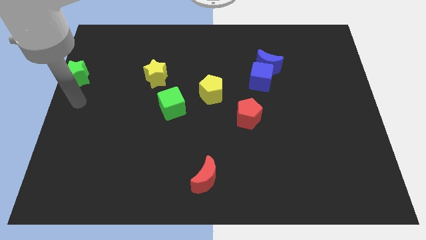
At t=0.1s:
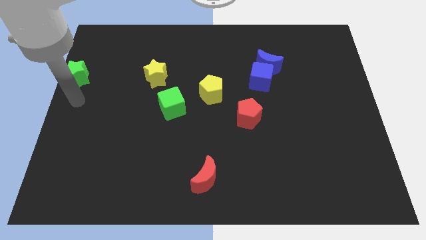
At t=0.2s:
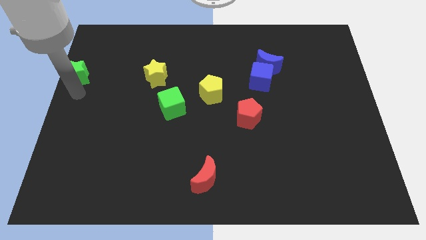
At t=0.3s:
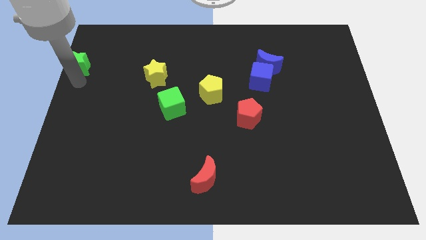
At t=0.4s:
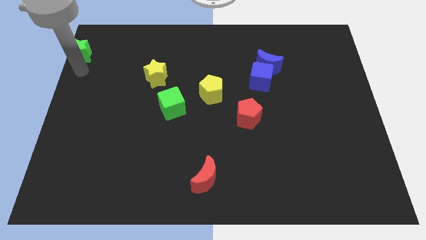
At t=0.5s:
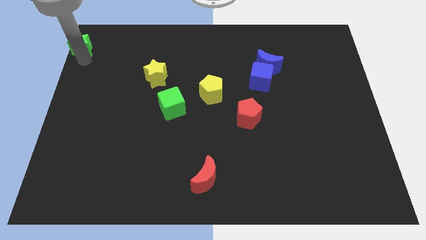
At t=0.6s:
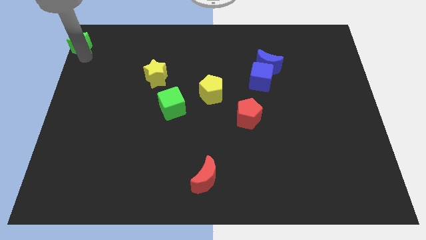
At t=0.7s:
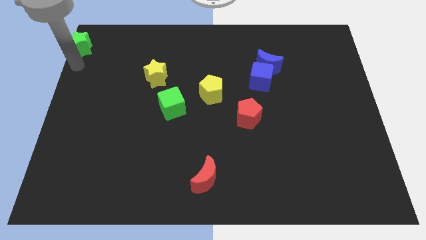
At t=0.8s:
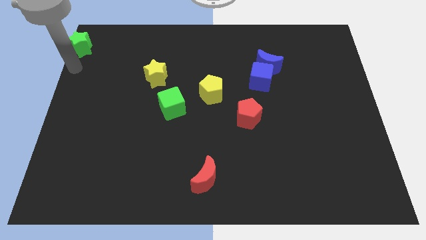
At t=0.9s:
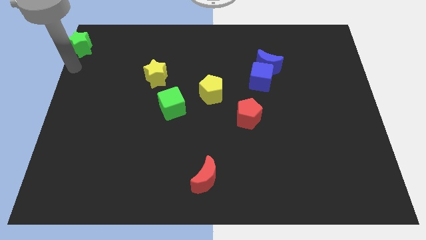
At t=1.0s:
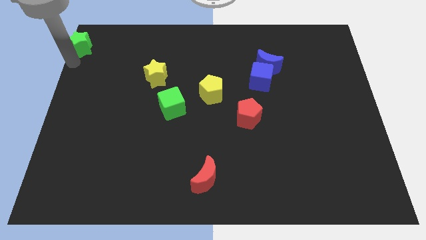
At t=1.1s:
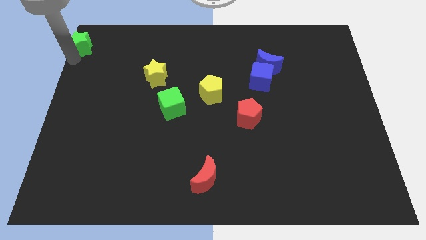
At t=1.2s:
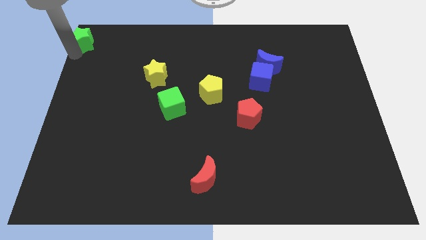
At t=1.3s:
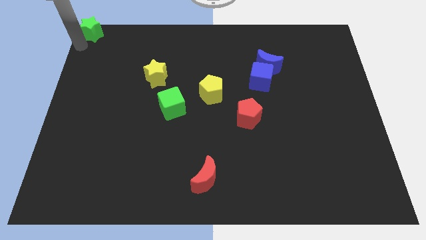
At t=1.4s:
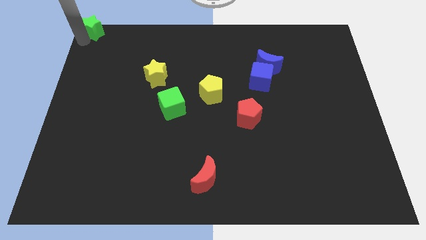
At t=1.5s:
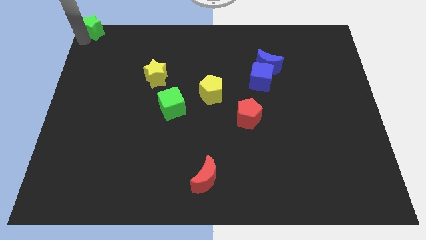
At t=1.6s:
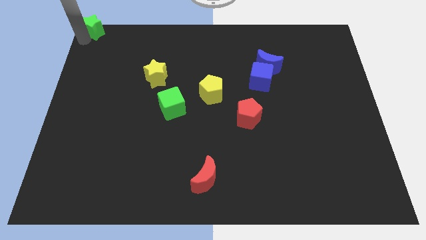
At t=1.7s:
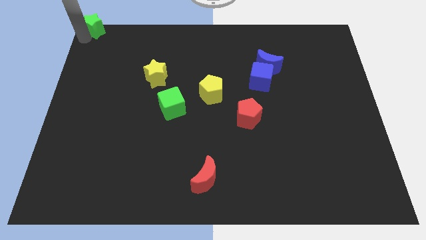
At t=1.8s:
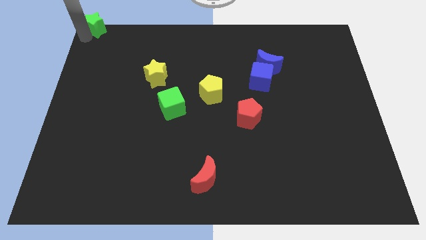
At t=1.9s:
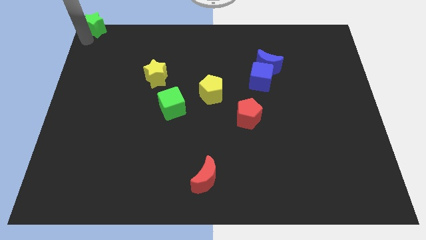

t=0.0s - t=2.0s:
move the green star to the top left corner of the board

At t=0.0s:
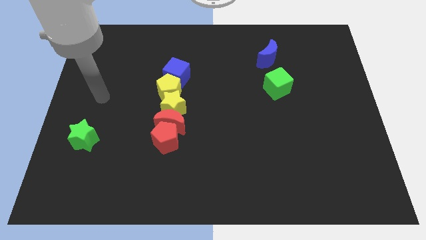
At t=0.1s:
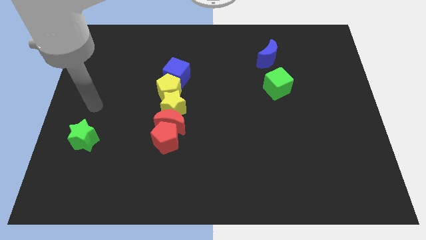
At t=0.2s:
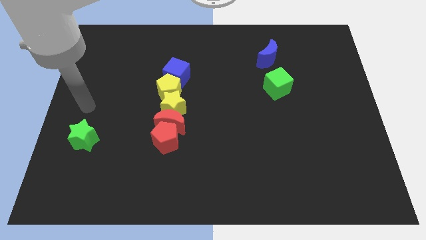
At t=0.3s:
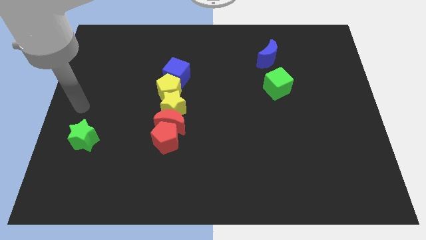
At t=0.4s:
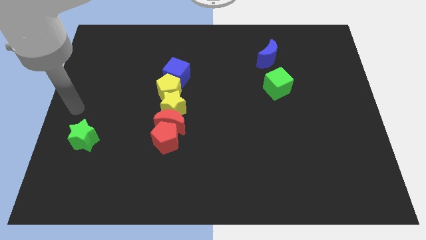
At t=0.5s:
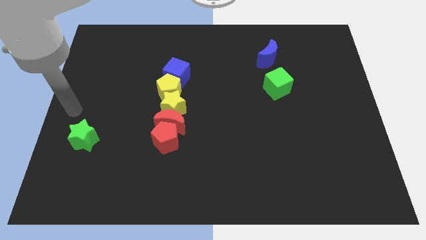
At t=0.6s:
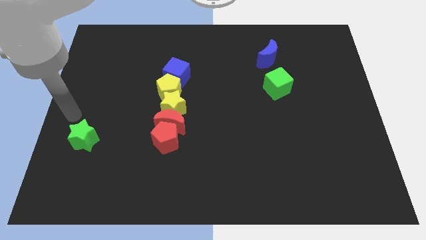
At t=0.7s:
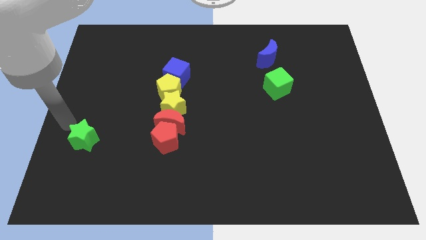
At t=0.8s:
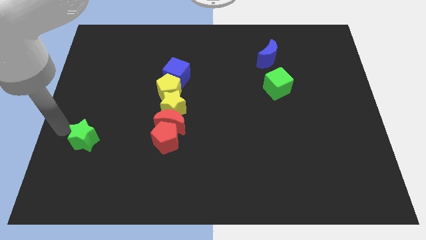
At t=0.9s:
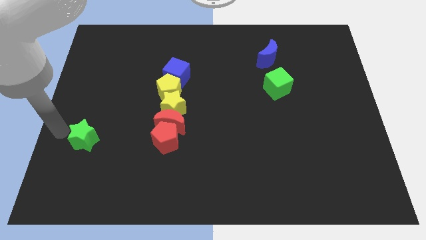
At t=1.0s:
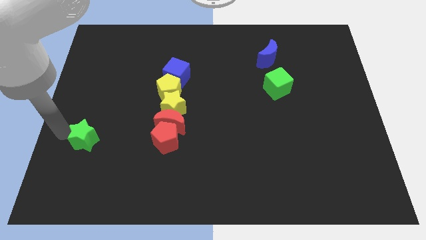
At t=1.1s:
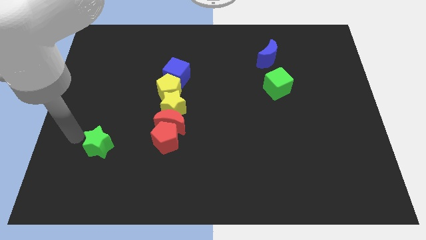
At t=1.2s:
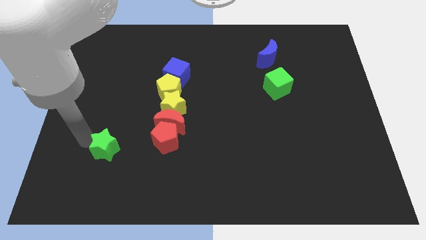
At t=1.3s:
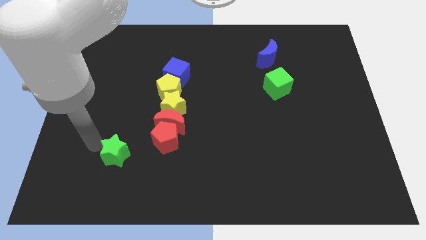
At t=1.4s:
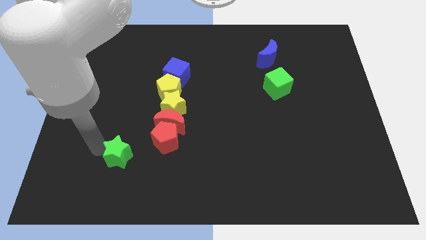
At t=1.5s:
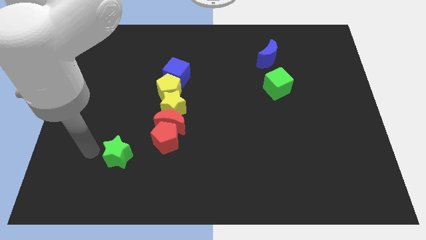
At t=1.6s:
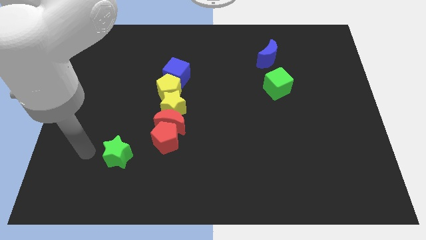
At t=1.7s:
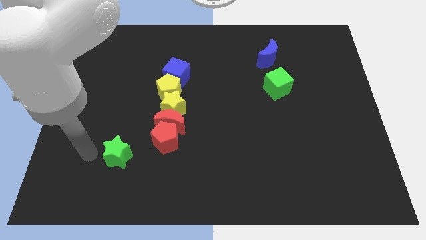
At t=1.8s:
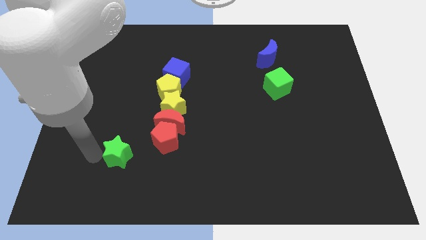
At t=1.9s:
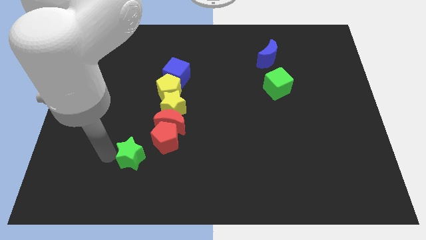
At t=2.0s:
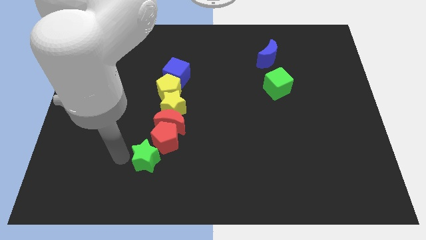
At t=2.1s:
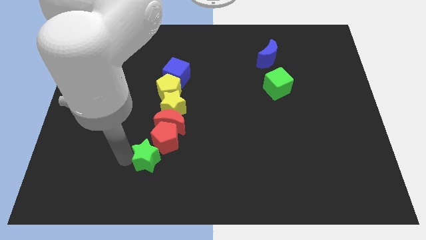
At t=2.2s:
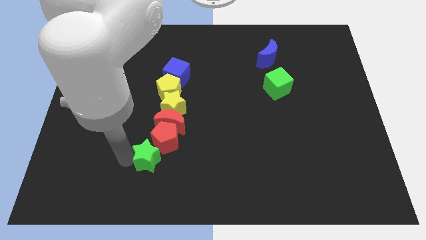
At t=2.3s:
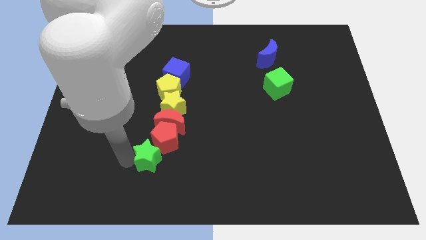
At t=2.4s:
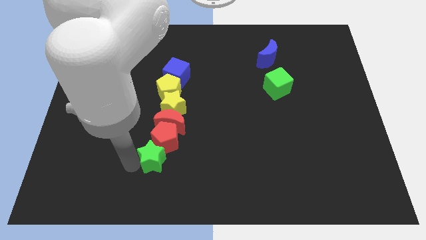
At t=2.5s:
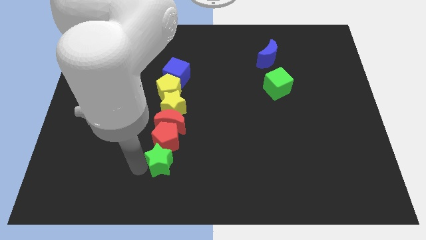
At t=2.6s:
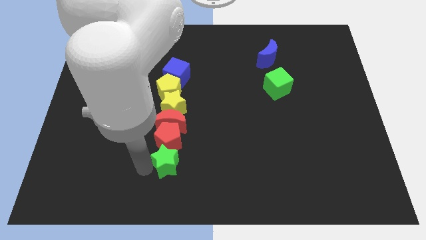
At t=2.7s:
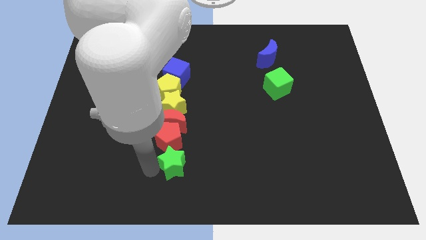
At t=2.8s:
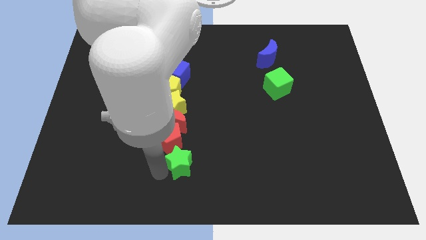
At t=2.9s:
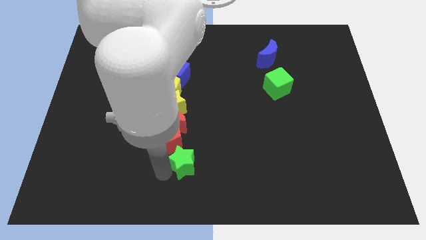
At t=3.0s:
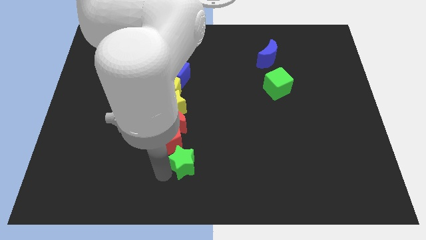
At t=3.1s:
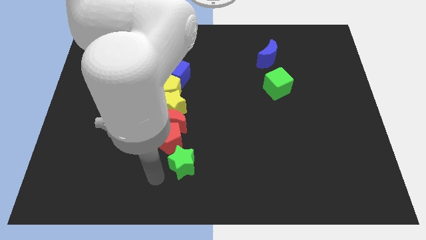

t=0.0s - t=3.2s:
move the green star at the right bottom of the red crescent

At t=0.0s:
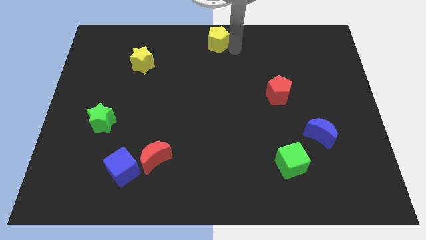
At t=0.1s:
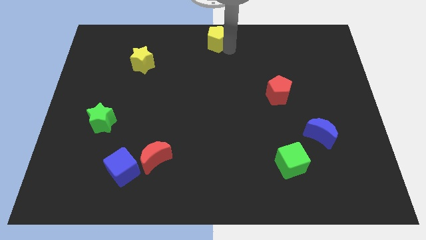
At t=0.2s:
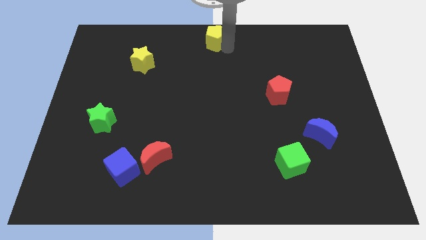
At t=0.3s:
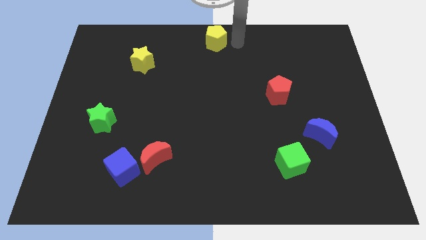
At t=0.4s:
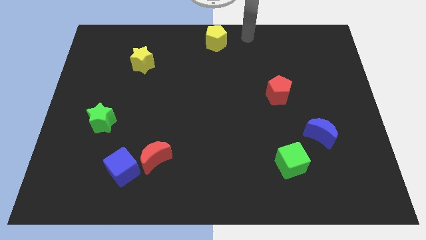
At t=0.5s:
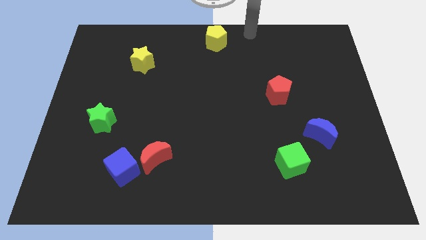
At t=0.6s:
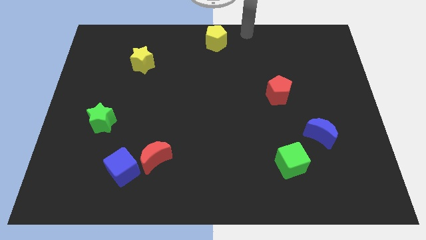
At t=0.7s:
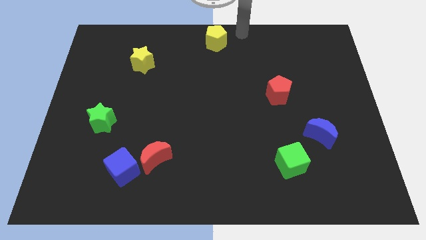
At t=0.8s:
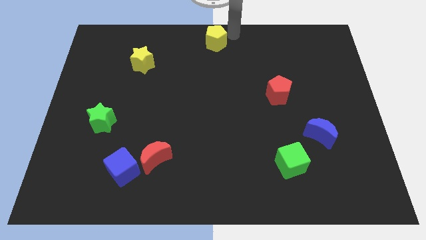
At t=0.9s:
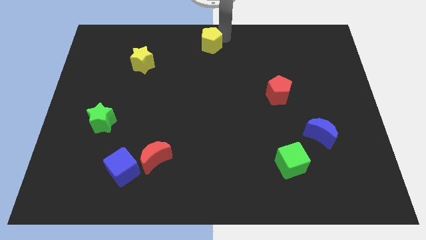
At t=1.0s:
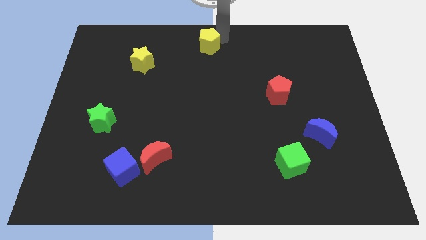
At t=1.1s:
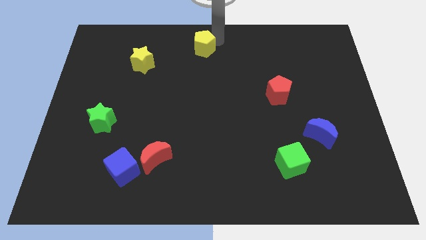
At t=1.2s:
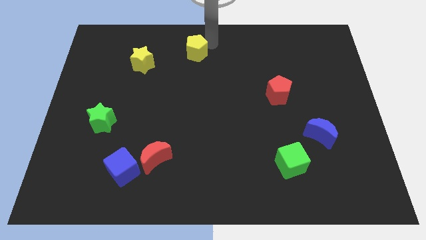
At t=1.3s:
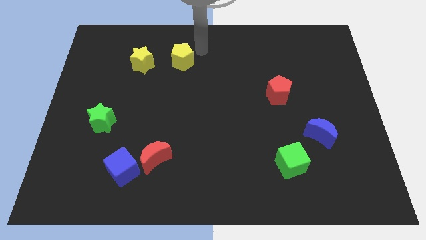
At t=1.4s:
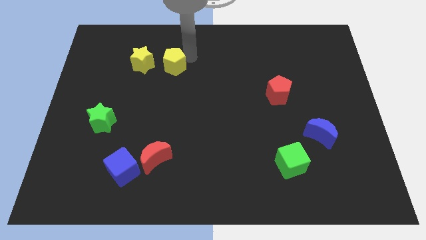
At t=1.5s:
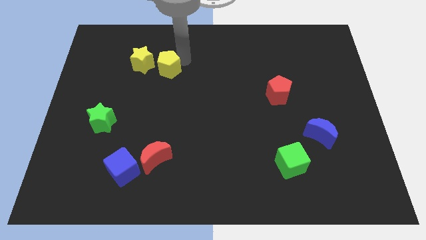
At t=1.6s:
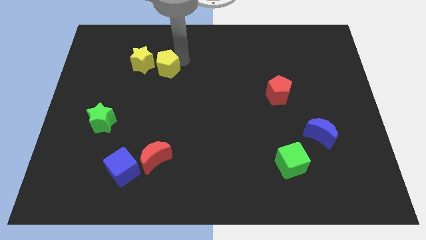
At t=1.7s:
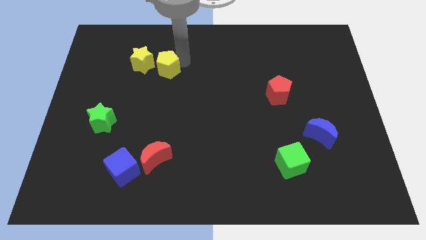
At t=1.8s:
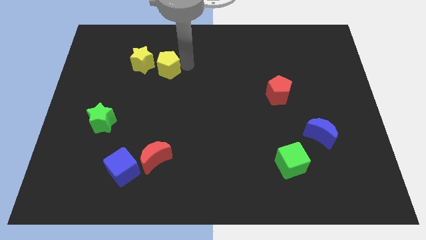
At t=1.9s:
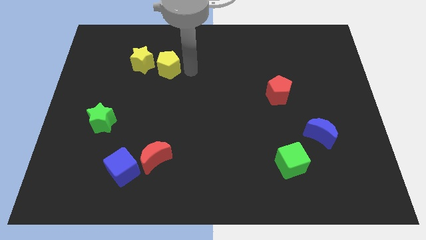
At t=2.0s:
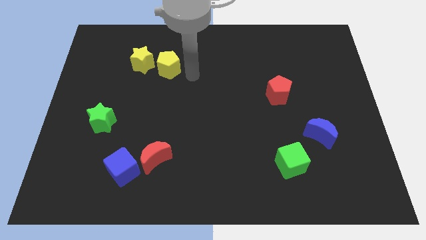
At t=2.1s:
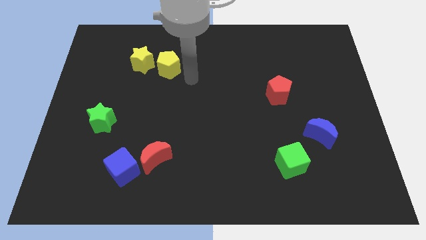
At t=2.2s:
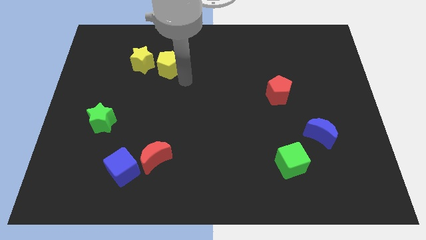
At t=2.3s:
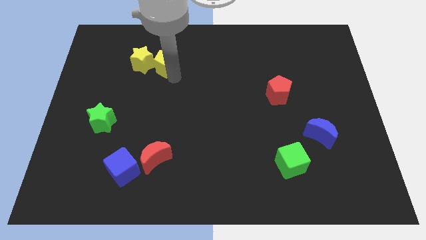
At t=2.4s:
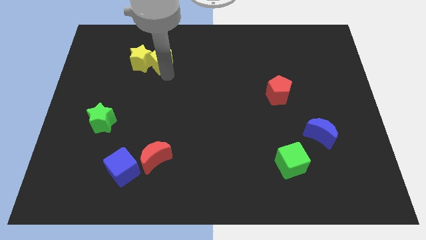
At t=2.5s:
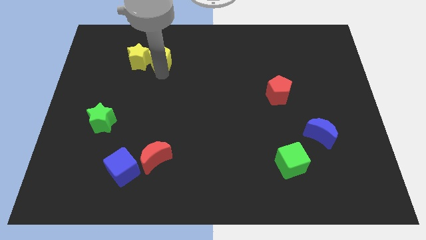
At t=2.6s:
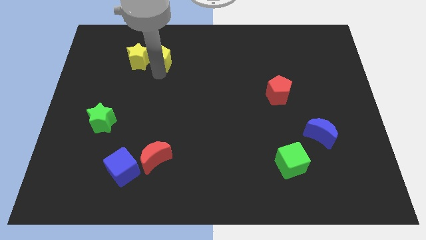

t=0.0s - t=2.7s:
push the yellow pentagon into the yellow star

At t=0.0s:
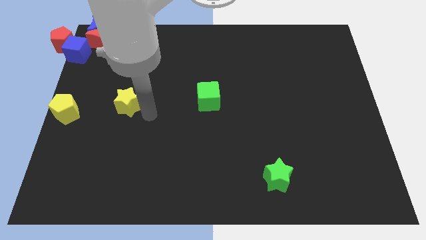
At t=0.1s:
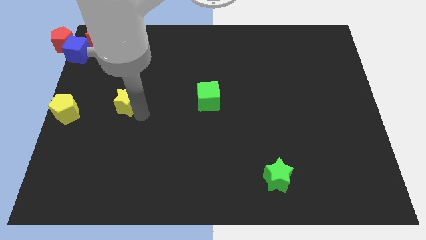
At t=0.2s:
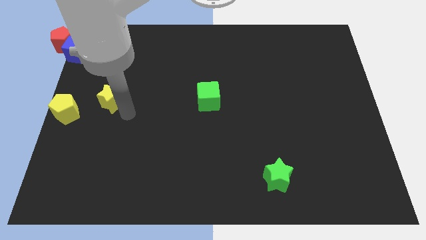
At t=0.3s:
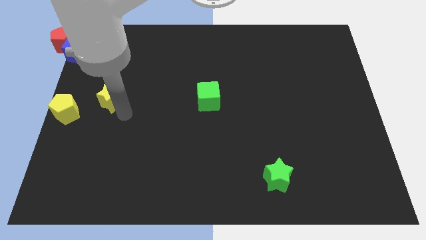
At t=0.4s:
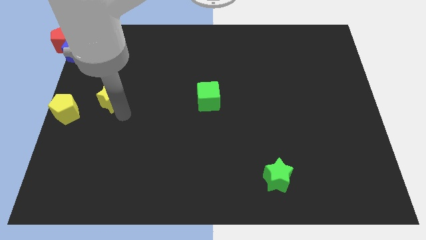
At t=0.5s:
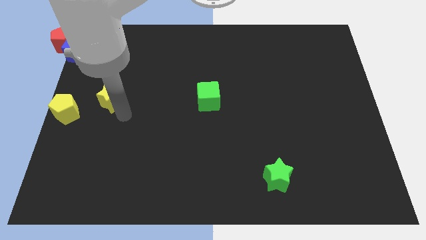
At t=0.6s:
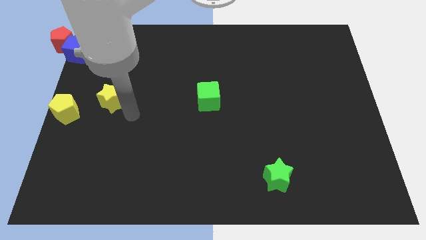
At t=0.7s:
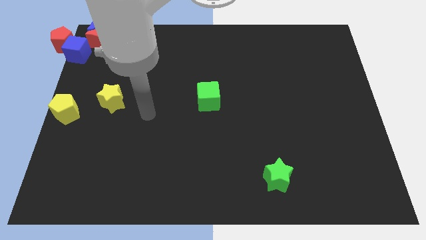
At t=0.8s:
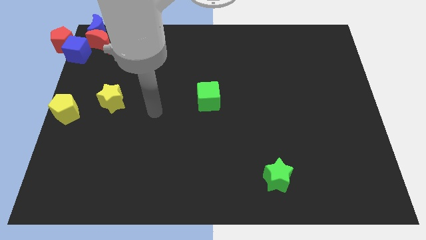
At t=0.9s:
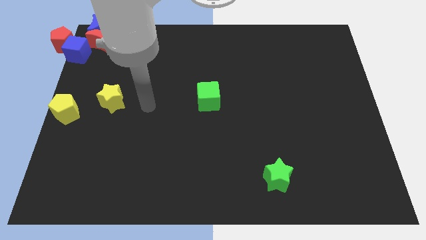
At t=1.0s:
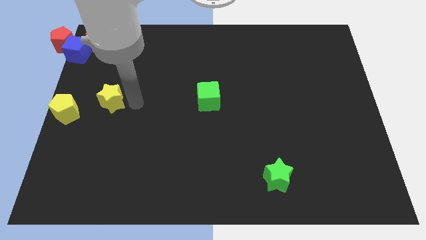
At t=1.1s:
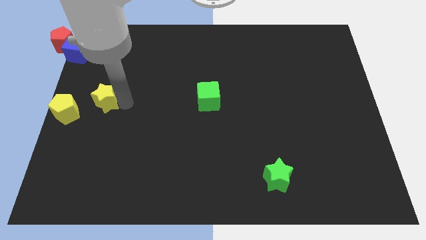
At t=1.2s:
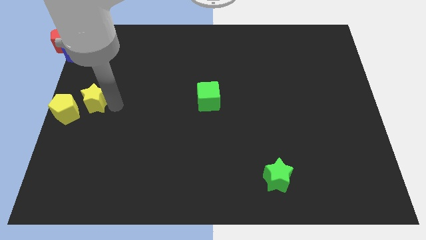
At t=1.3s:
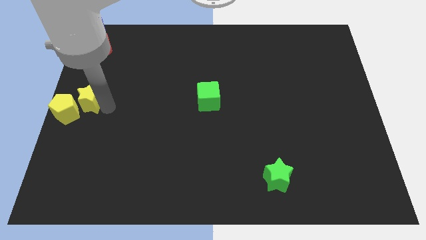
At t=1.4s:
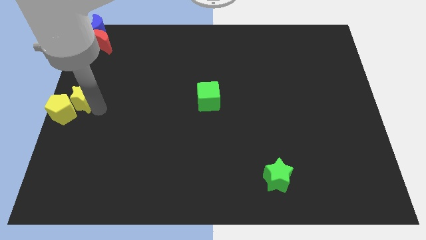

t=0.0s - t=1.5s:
push yellow star towards yellow pentagon
